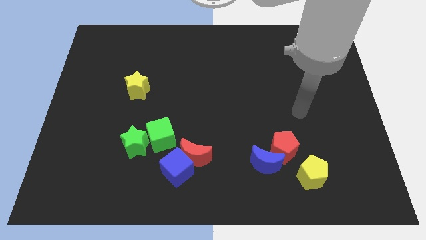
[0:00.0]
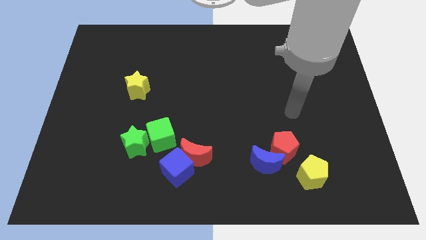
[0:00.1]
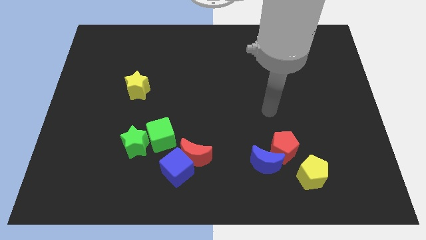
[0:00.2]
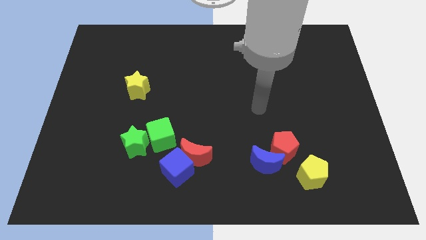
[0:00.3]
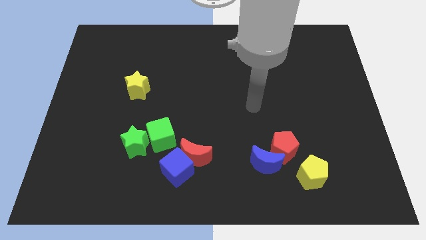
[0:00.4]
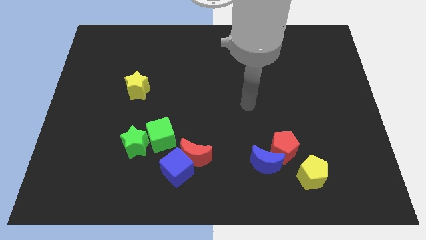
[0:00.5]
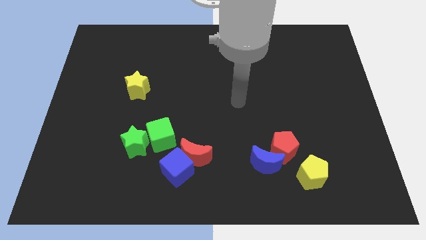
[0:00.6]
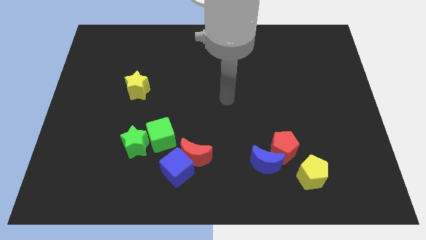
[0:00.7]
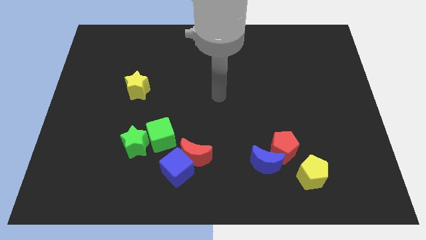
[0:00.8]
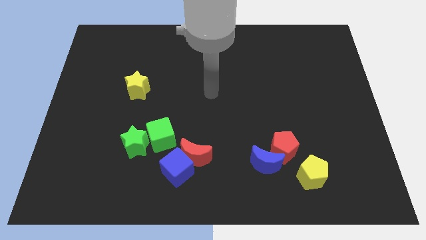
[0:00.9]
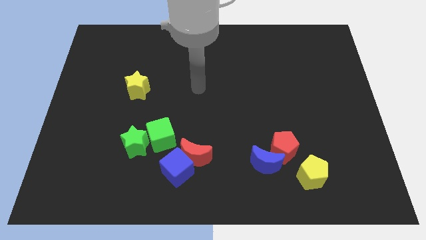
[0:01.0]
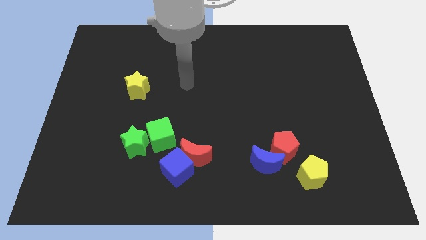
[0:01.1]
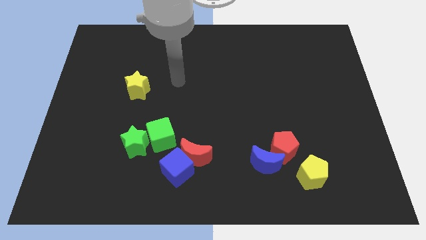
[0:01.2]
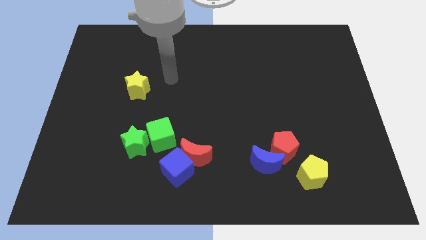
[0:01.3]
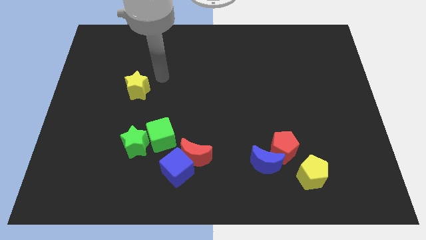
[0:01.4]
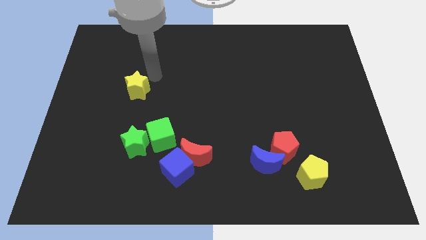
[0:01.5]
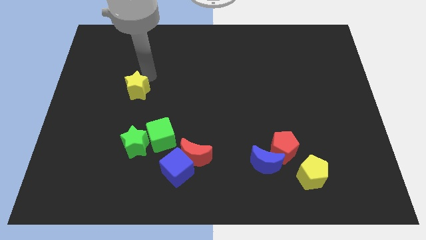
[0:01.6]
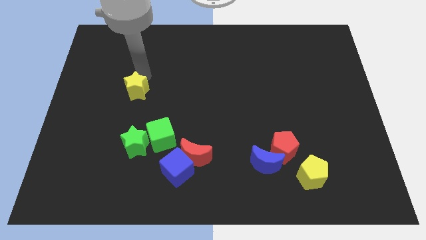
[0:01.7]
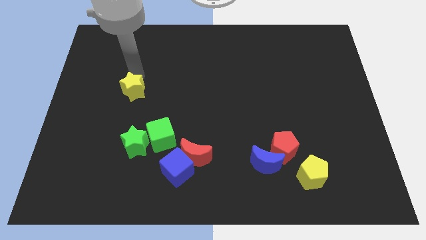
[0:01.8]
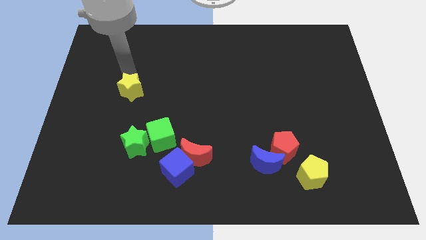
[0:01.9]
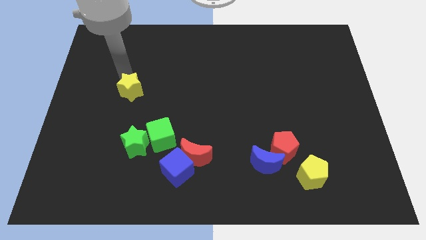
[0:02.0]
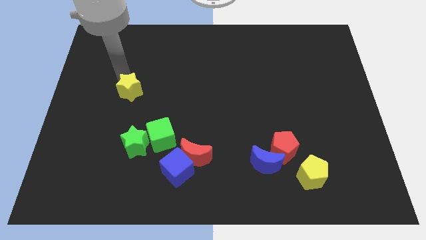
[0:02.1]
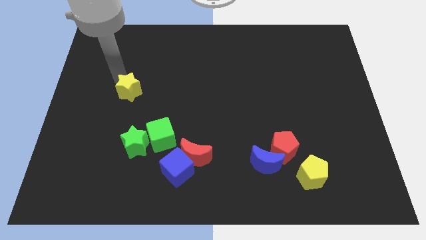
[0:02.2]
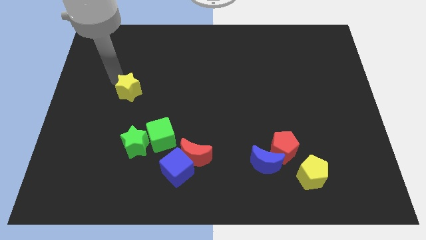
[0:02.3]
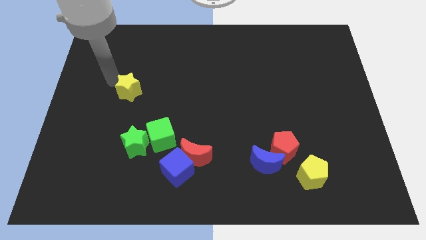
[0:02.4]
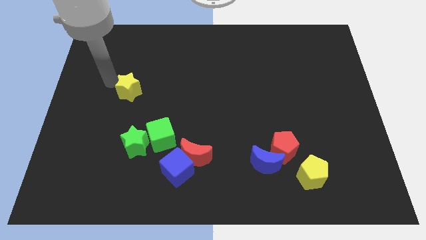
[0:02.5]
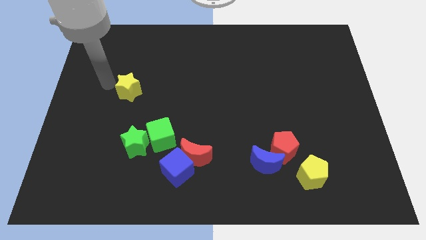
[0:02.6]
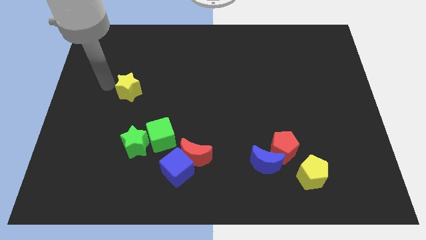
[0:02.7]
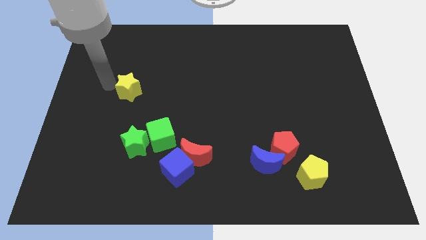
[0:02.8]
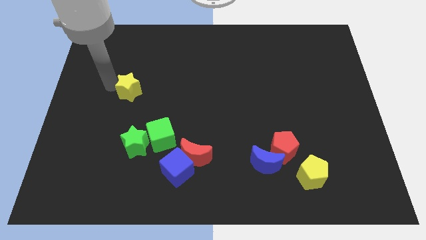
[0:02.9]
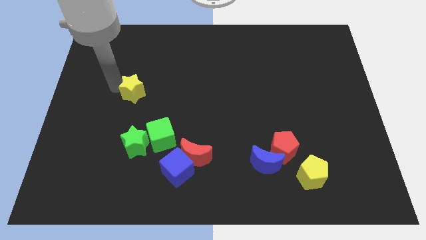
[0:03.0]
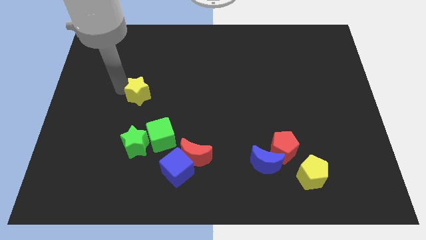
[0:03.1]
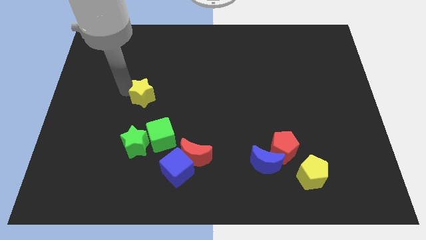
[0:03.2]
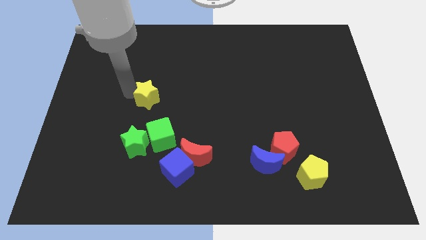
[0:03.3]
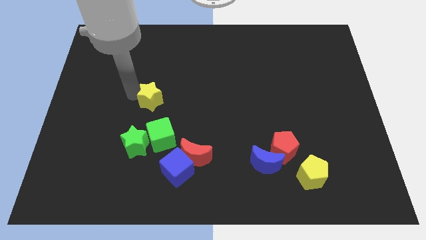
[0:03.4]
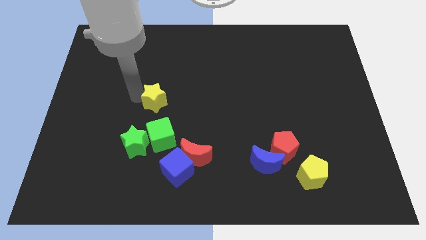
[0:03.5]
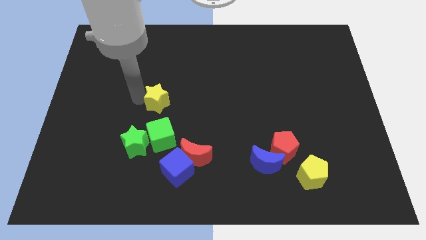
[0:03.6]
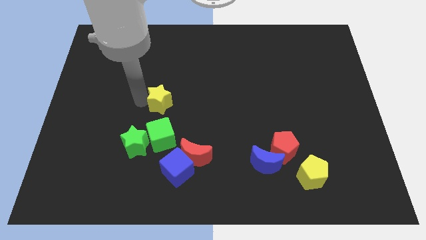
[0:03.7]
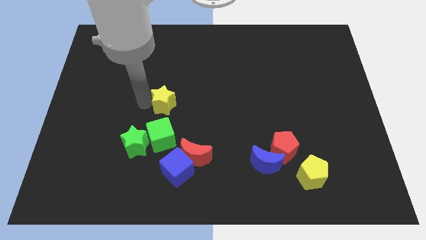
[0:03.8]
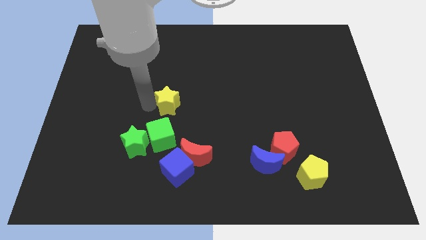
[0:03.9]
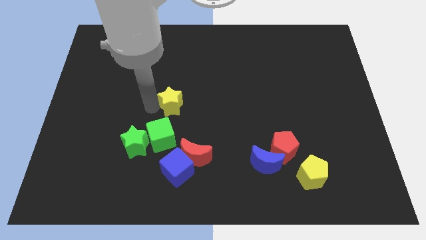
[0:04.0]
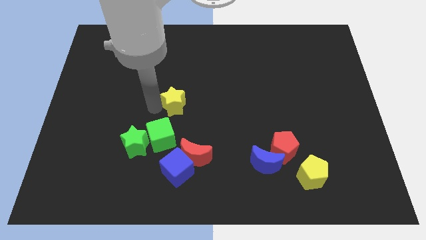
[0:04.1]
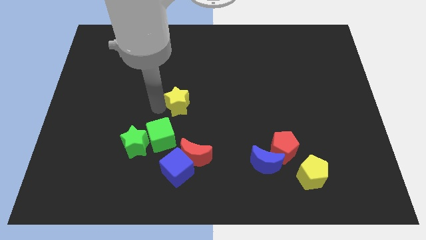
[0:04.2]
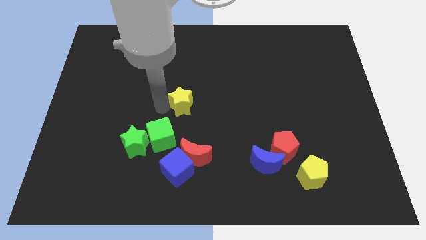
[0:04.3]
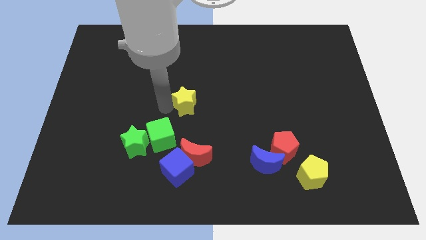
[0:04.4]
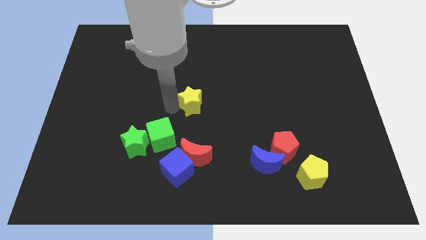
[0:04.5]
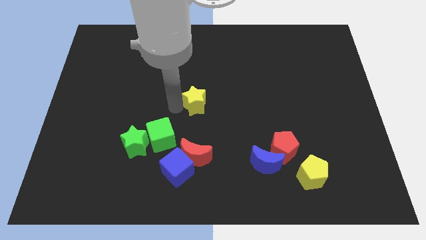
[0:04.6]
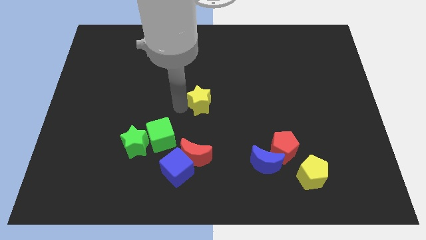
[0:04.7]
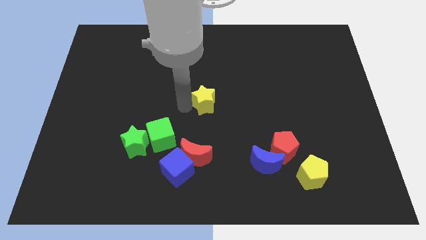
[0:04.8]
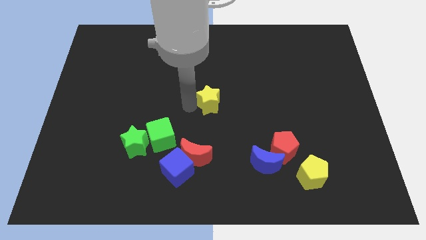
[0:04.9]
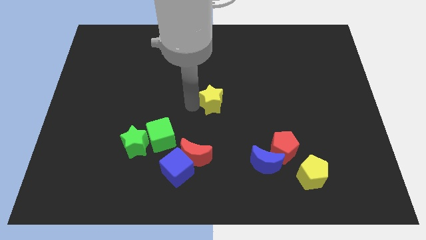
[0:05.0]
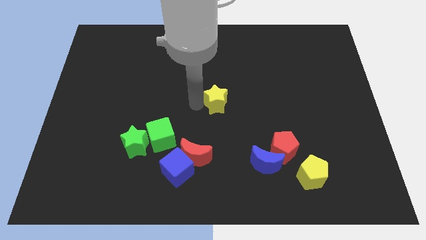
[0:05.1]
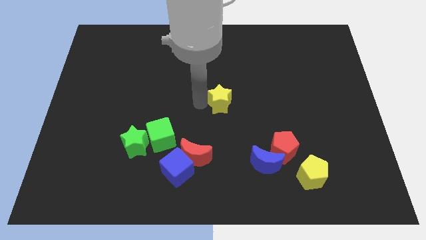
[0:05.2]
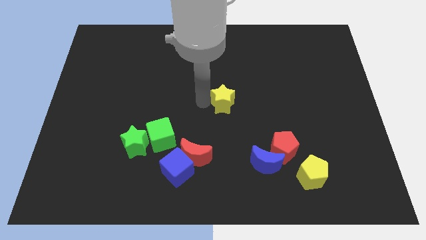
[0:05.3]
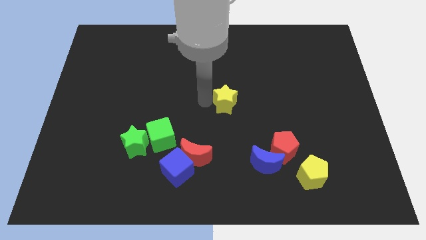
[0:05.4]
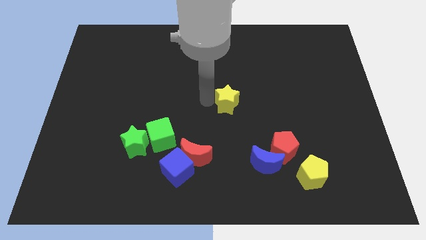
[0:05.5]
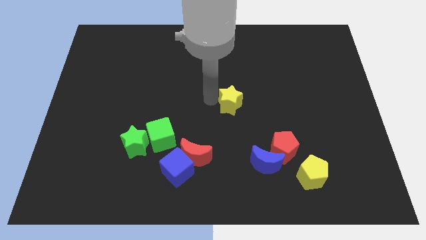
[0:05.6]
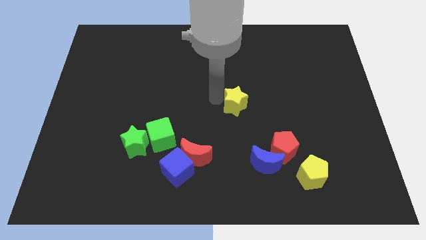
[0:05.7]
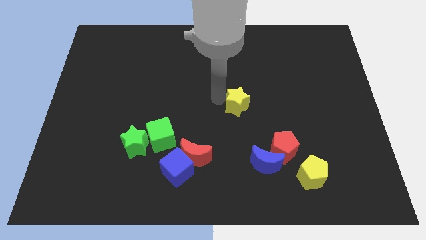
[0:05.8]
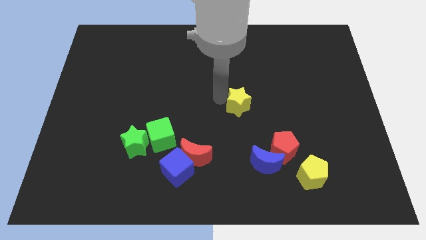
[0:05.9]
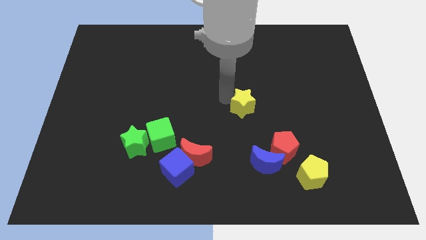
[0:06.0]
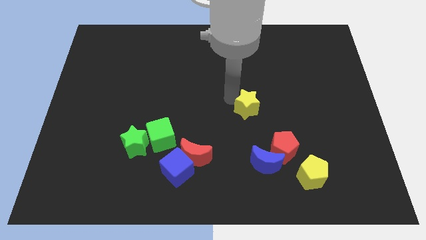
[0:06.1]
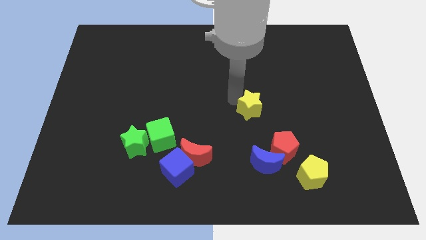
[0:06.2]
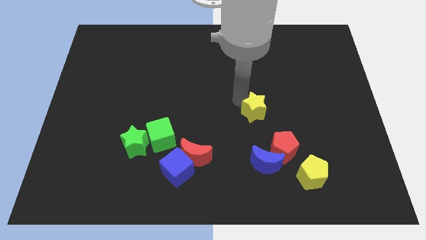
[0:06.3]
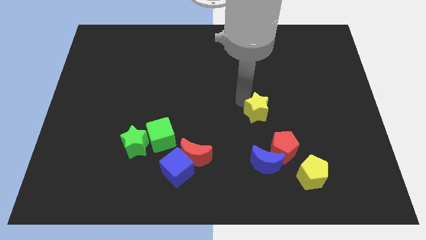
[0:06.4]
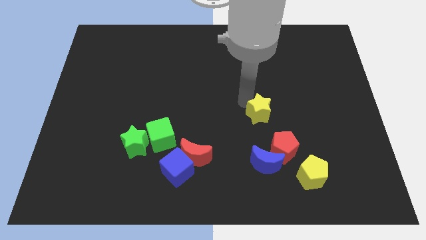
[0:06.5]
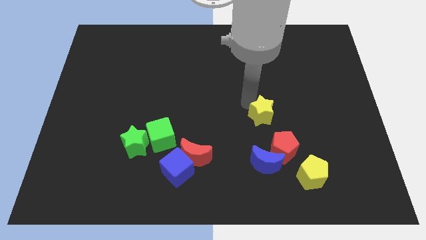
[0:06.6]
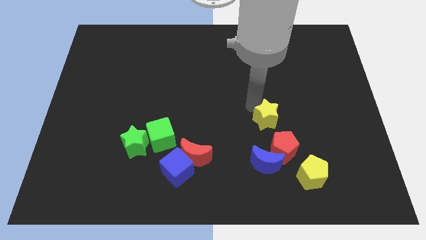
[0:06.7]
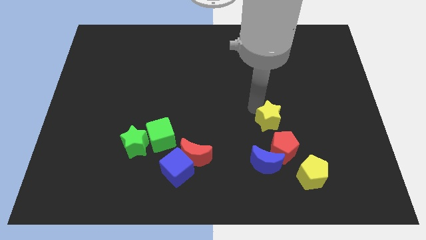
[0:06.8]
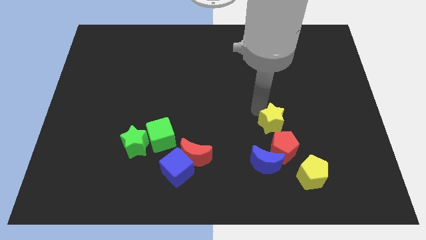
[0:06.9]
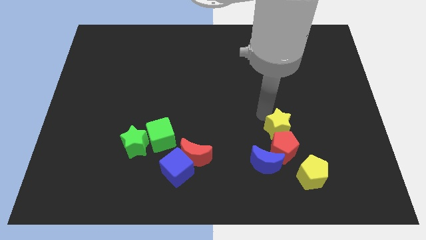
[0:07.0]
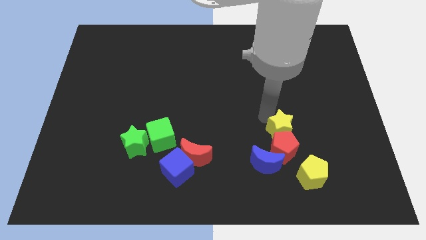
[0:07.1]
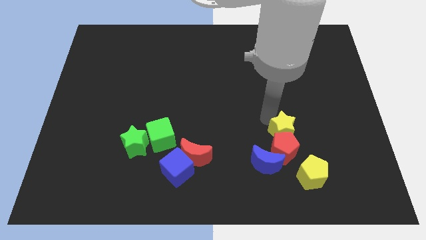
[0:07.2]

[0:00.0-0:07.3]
move the yellow star towards the red pentagon

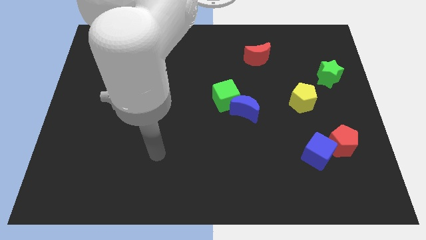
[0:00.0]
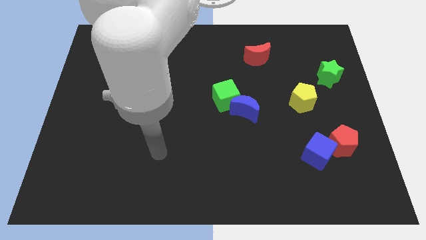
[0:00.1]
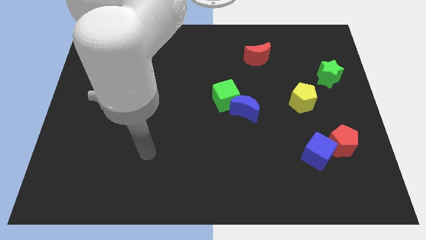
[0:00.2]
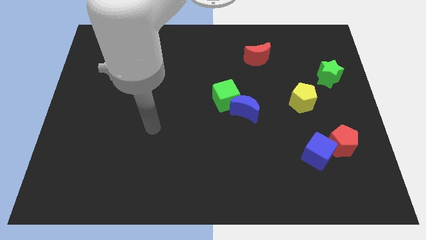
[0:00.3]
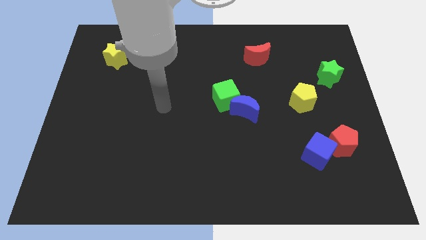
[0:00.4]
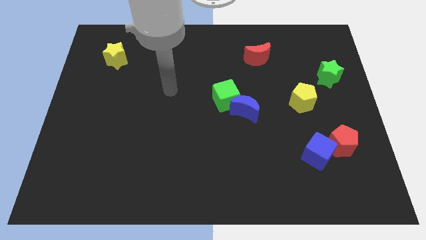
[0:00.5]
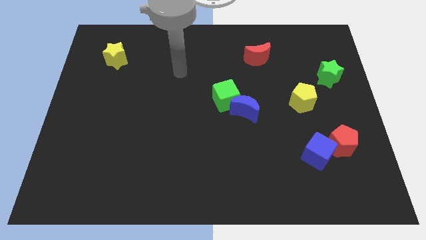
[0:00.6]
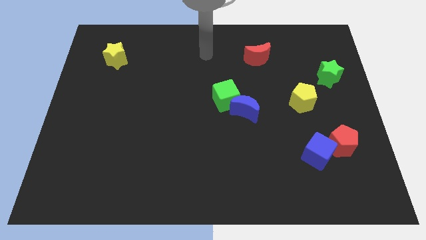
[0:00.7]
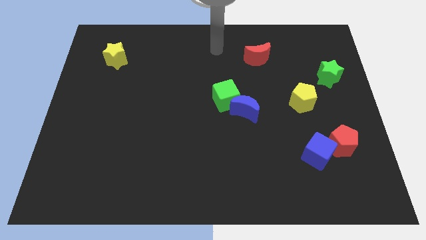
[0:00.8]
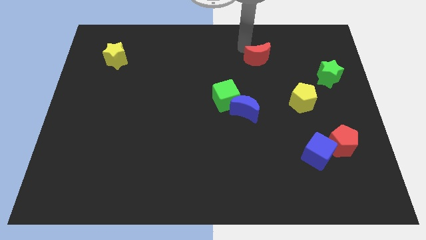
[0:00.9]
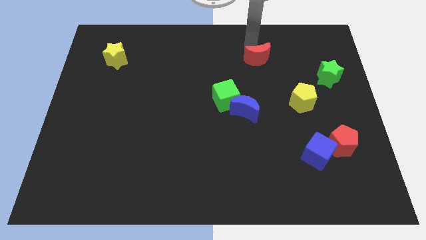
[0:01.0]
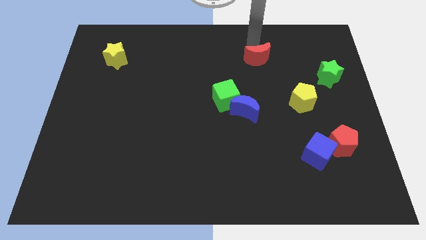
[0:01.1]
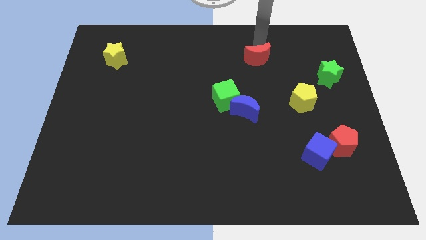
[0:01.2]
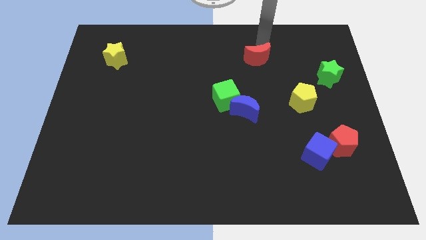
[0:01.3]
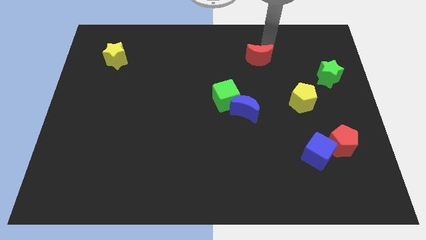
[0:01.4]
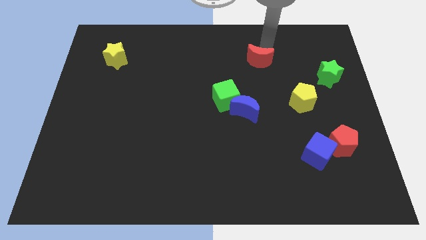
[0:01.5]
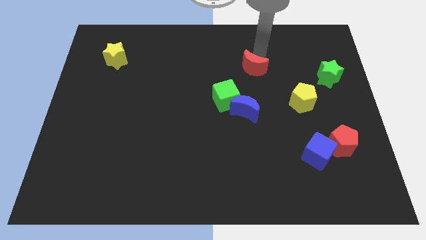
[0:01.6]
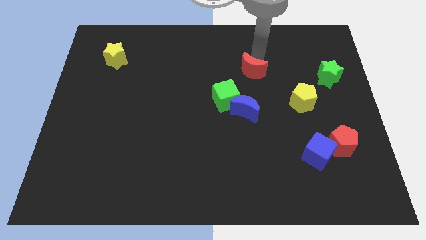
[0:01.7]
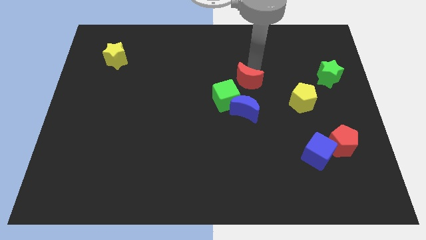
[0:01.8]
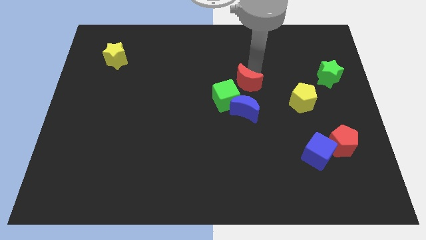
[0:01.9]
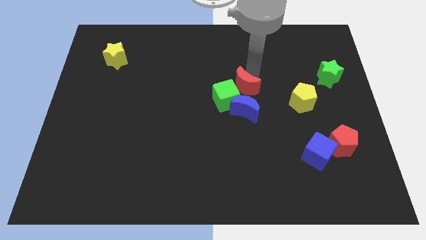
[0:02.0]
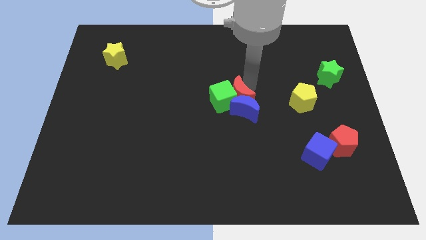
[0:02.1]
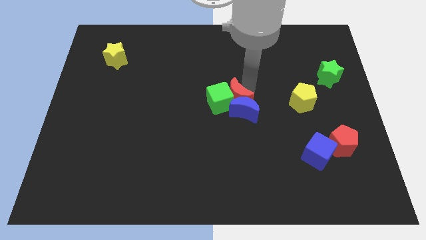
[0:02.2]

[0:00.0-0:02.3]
slide the red moon close to the green cube
